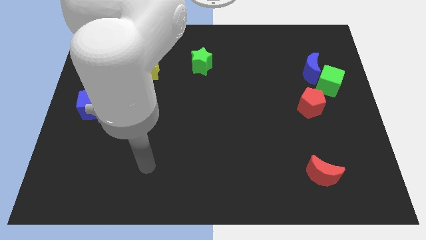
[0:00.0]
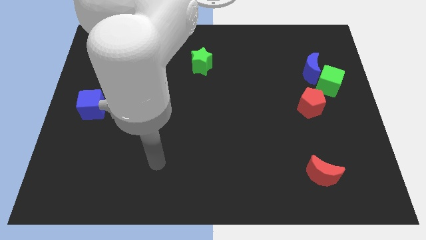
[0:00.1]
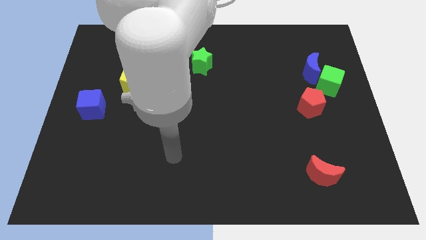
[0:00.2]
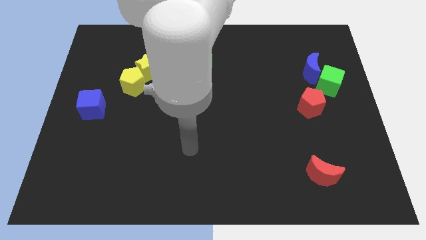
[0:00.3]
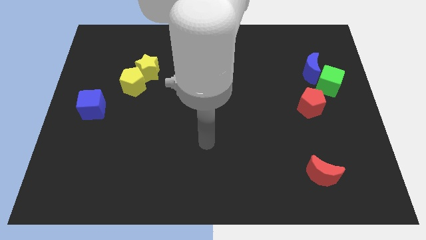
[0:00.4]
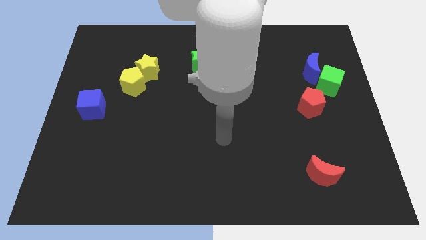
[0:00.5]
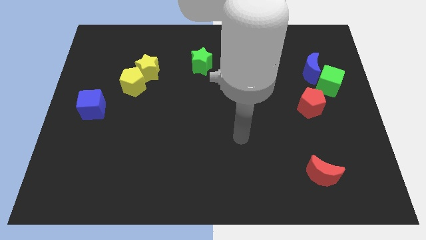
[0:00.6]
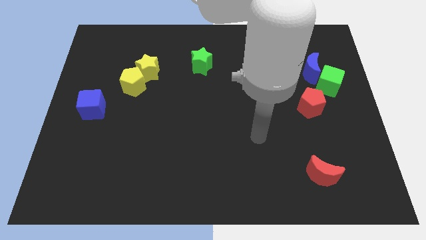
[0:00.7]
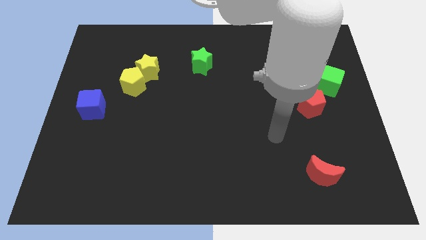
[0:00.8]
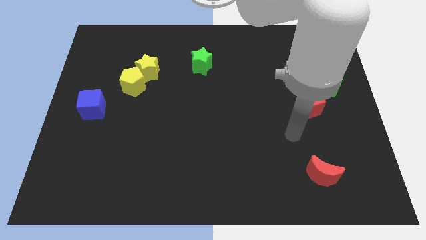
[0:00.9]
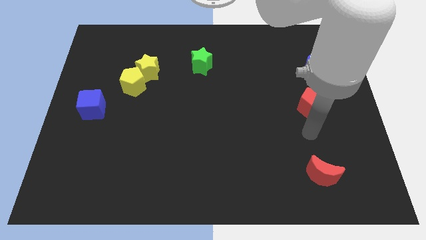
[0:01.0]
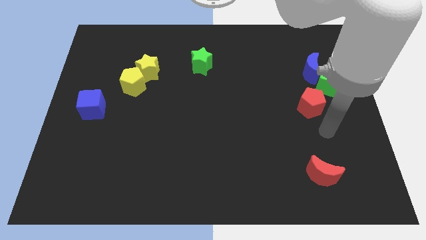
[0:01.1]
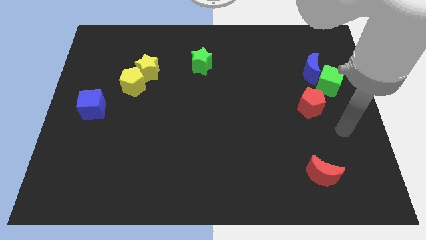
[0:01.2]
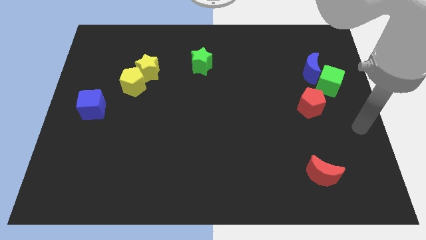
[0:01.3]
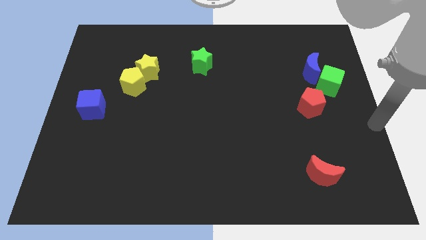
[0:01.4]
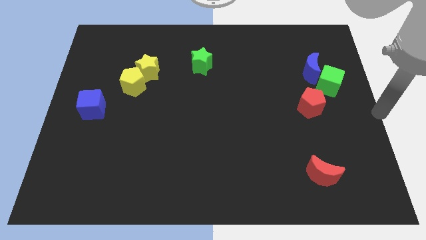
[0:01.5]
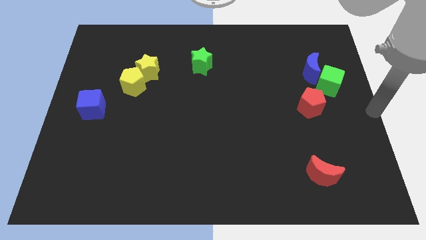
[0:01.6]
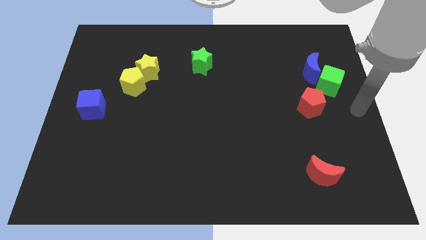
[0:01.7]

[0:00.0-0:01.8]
move your hand to the center right

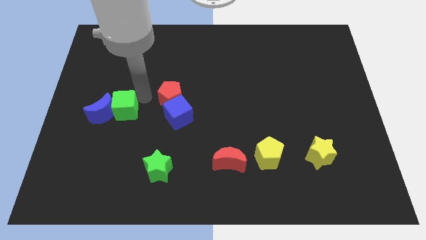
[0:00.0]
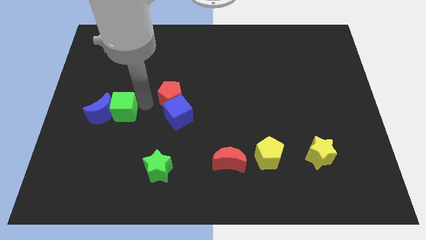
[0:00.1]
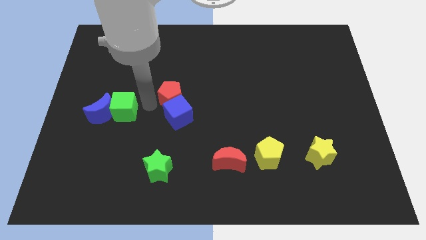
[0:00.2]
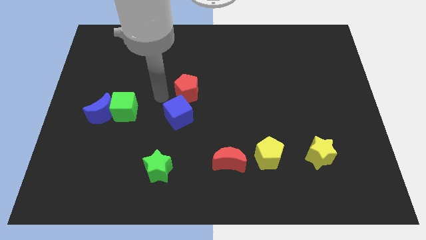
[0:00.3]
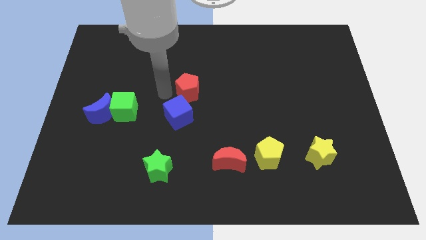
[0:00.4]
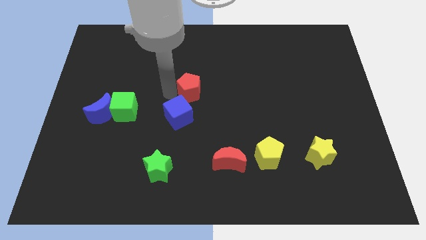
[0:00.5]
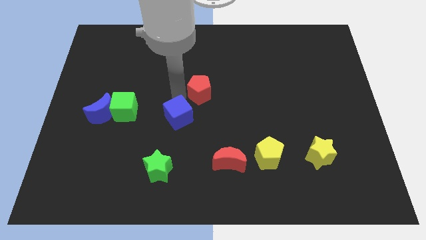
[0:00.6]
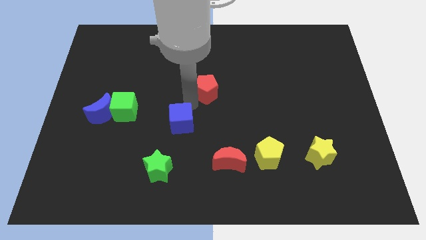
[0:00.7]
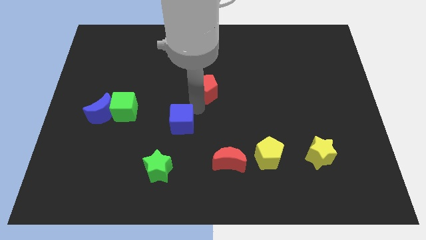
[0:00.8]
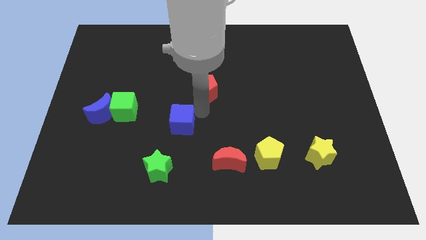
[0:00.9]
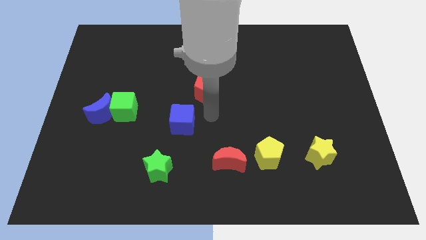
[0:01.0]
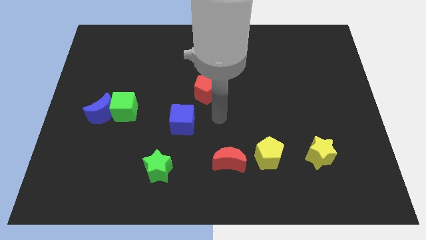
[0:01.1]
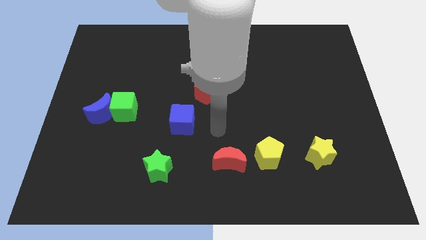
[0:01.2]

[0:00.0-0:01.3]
place your arm in between the red blocks

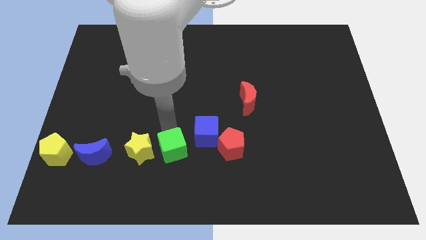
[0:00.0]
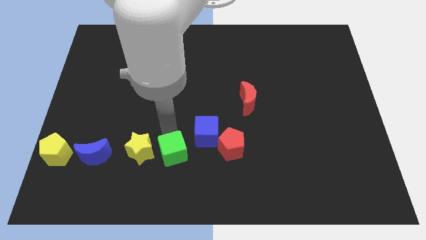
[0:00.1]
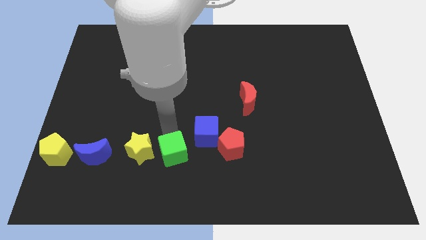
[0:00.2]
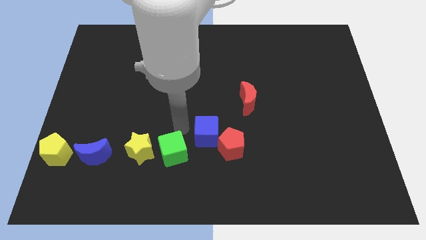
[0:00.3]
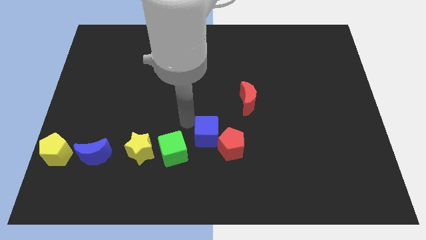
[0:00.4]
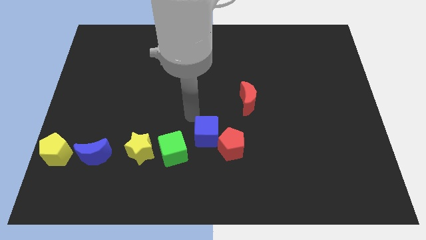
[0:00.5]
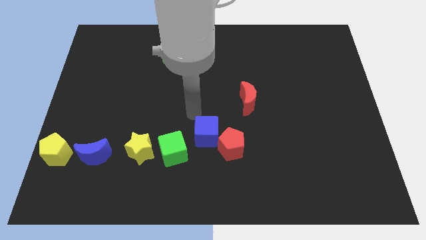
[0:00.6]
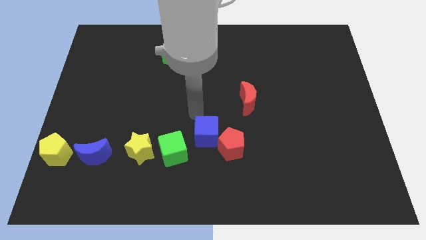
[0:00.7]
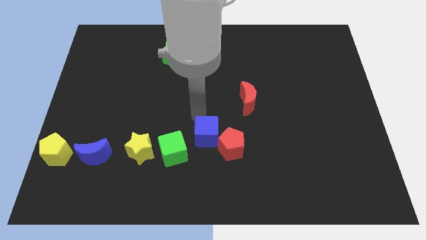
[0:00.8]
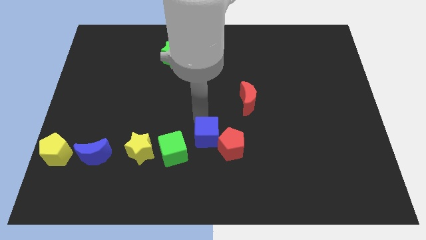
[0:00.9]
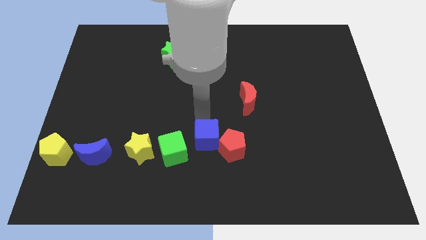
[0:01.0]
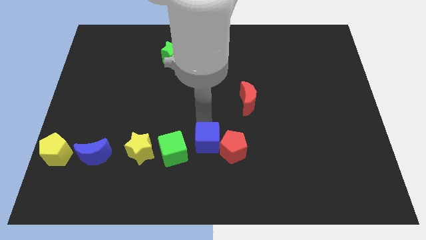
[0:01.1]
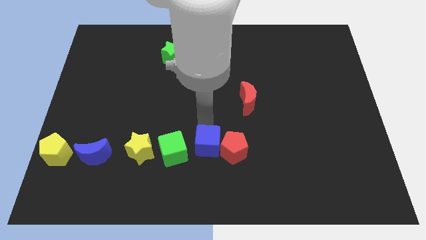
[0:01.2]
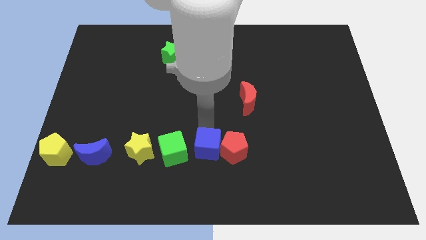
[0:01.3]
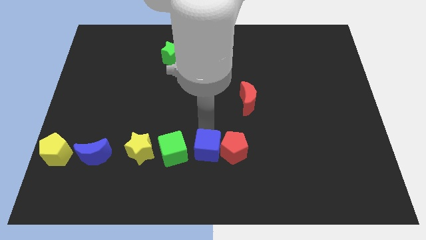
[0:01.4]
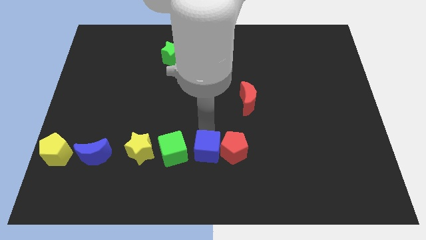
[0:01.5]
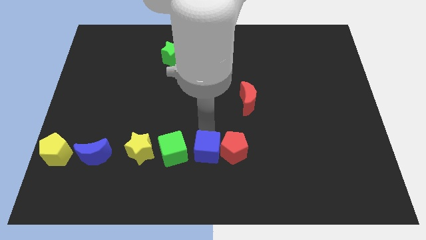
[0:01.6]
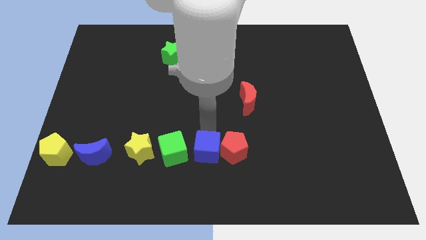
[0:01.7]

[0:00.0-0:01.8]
place the blue cube in between the red pentagon and green cube

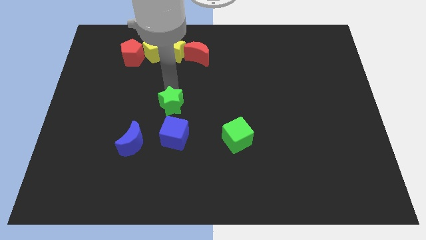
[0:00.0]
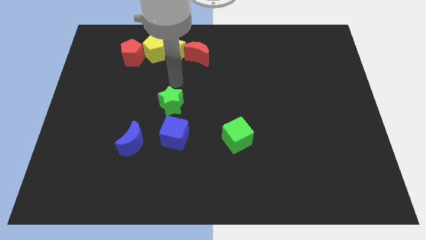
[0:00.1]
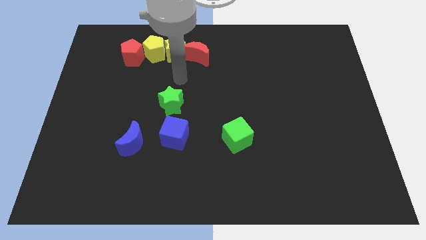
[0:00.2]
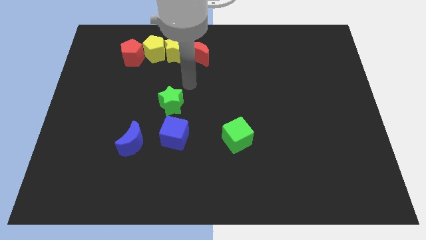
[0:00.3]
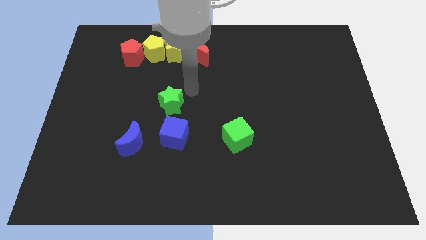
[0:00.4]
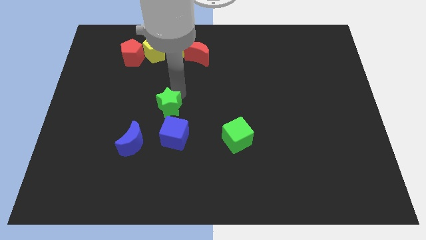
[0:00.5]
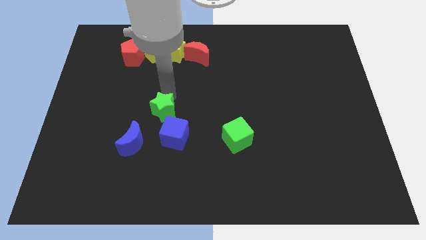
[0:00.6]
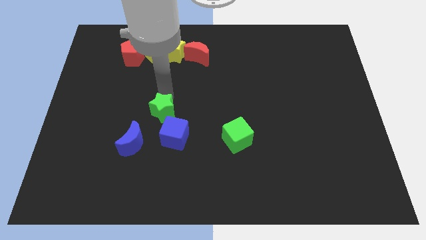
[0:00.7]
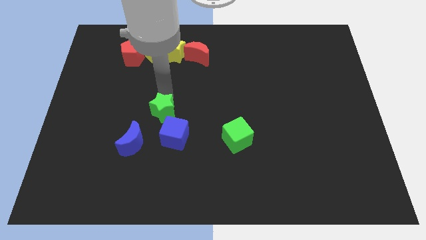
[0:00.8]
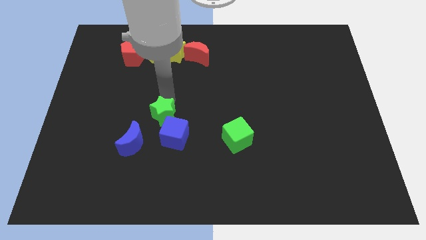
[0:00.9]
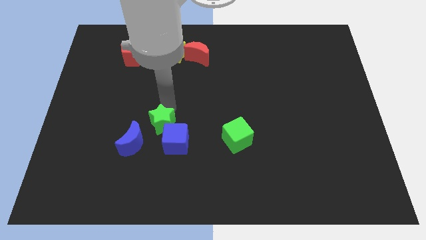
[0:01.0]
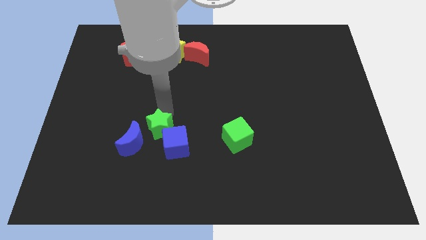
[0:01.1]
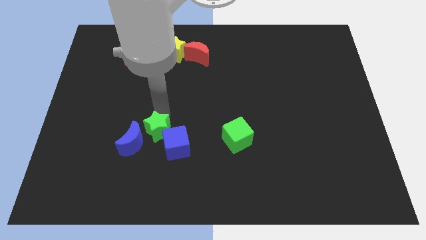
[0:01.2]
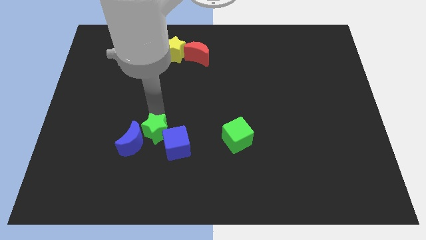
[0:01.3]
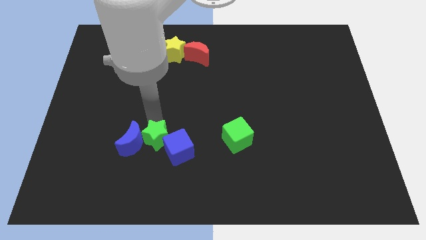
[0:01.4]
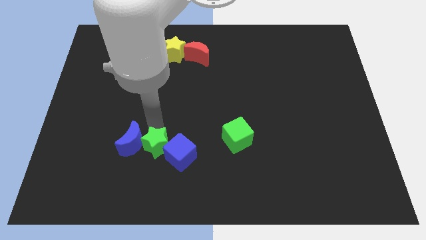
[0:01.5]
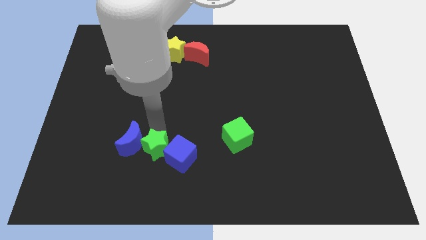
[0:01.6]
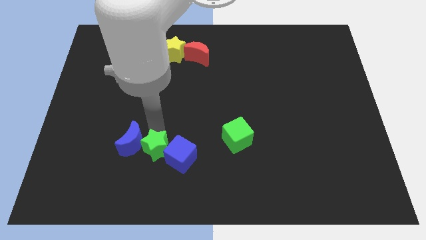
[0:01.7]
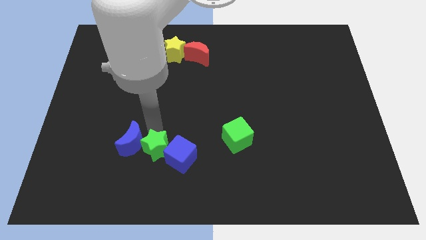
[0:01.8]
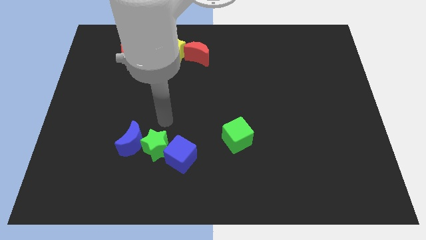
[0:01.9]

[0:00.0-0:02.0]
push the green star into the blue cube

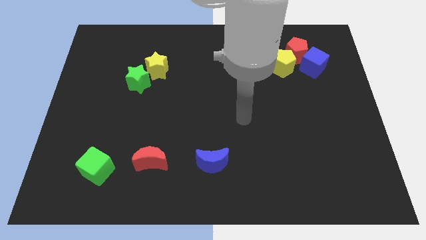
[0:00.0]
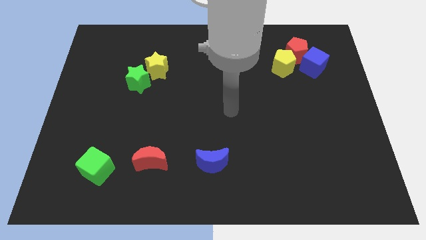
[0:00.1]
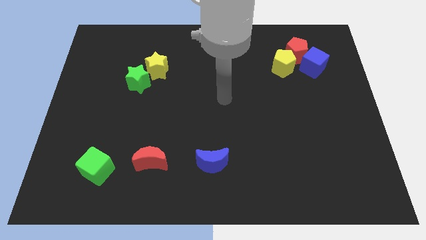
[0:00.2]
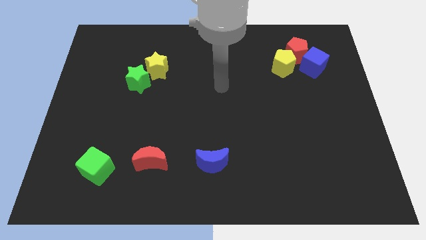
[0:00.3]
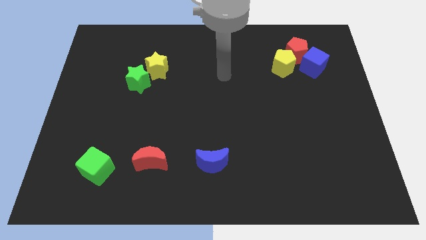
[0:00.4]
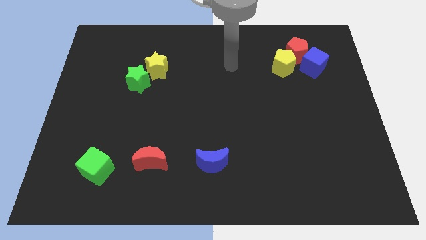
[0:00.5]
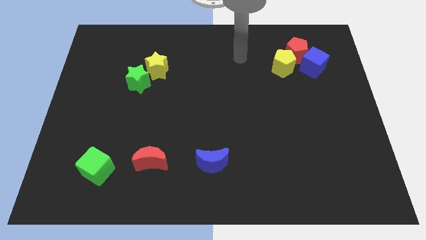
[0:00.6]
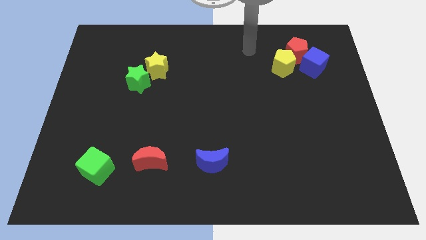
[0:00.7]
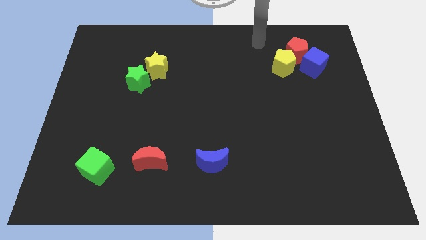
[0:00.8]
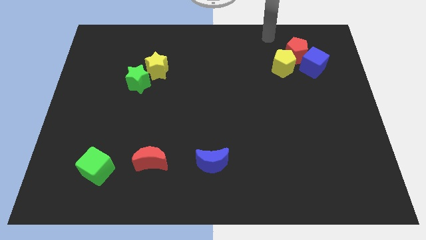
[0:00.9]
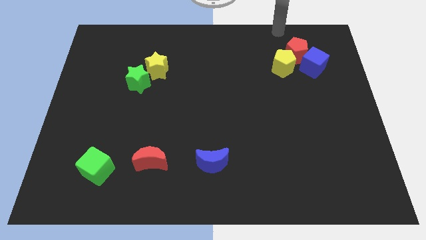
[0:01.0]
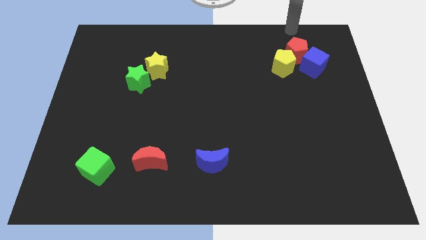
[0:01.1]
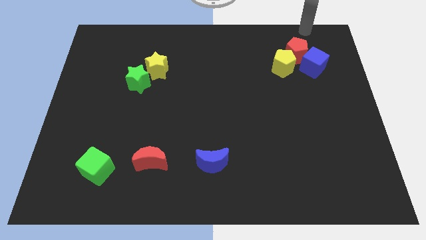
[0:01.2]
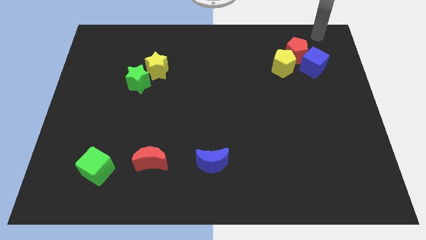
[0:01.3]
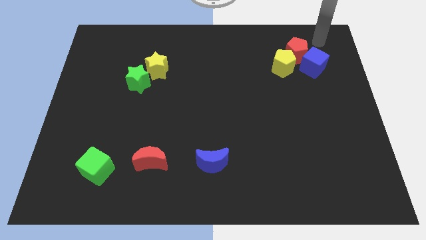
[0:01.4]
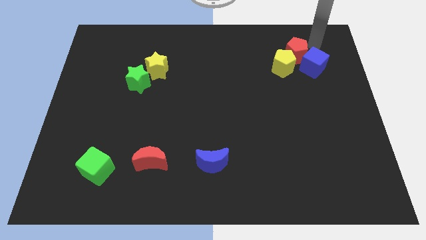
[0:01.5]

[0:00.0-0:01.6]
place the arm to the right side of the red pentagon

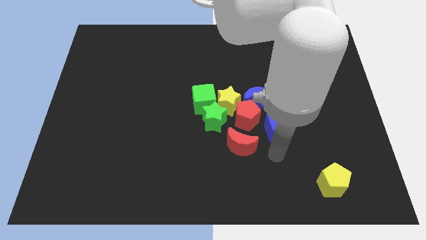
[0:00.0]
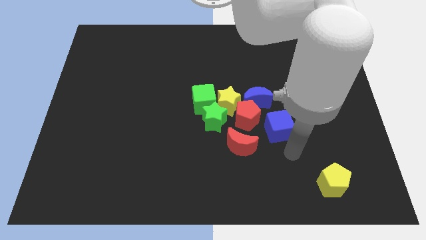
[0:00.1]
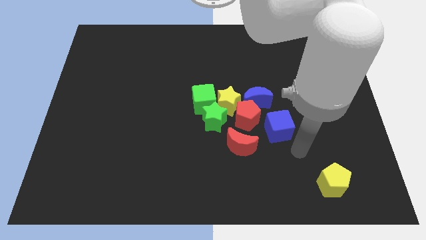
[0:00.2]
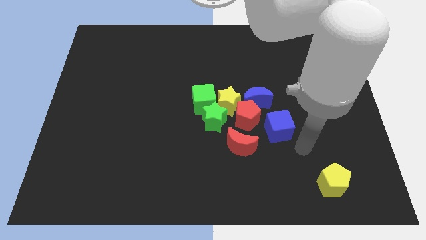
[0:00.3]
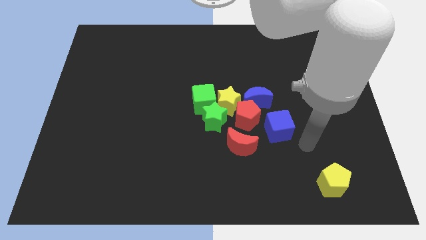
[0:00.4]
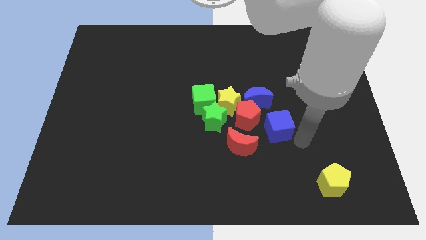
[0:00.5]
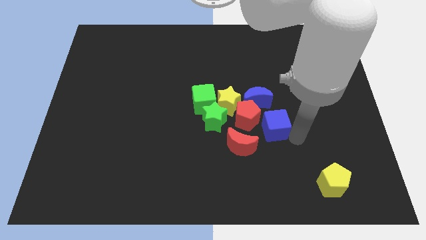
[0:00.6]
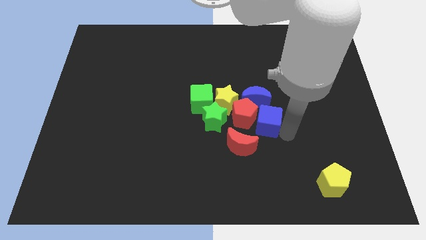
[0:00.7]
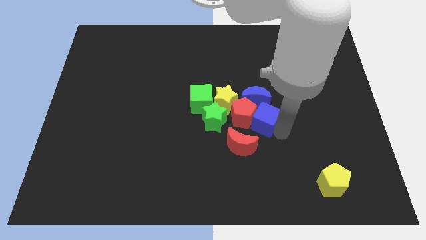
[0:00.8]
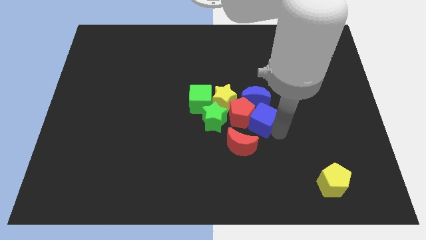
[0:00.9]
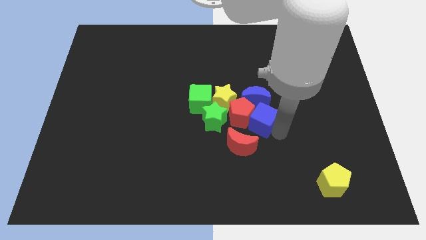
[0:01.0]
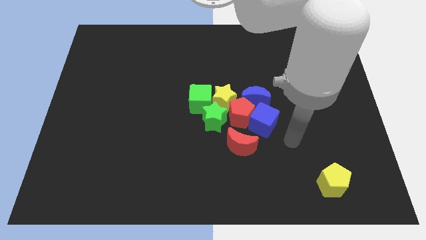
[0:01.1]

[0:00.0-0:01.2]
push the blue cube into the red pentagon
